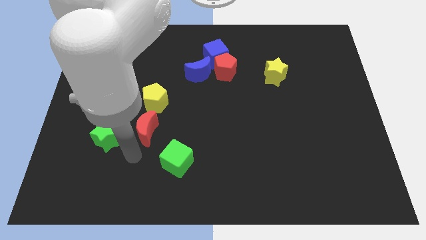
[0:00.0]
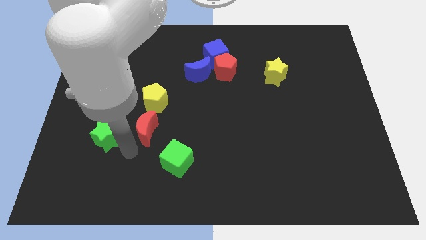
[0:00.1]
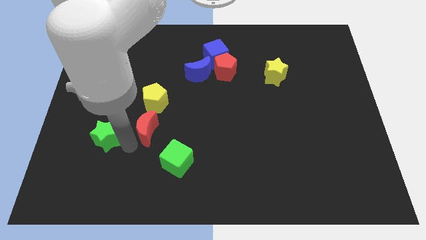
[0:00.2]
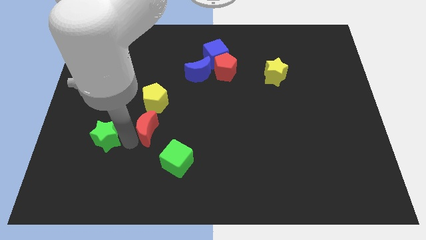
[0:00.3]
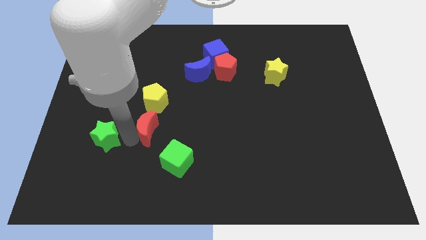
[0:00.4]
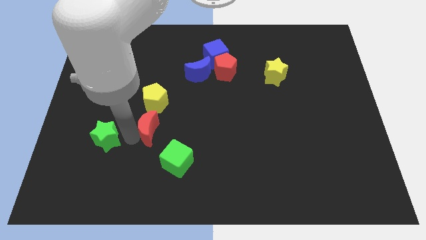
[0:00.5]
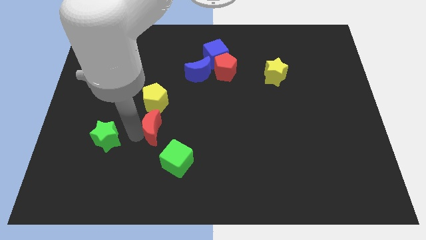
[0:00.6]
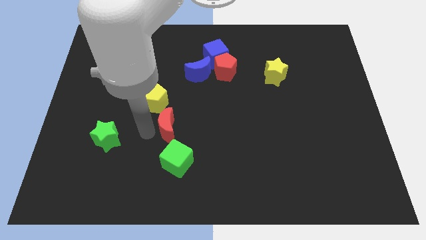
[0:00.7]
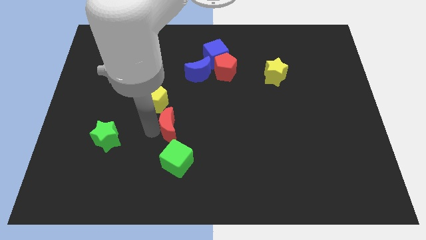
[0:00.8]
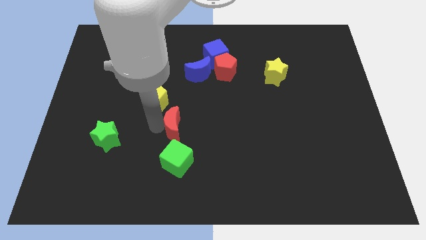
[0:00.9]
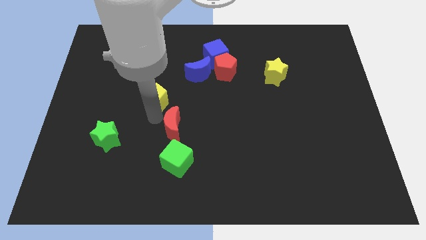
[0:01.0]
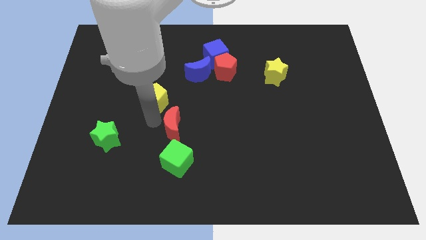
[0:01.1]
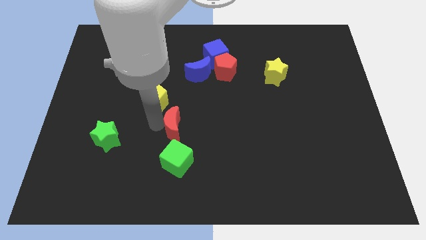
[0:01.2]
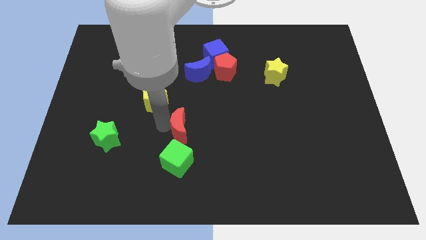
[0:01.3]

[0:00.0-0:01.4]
place the red moon above the green cube

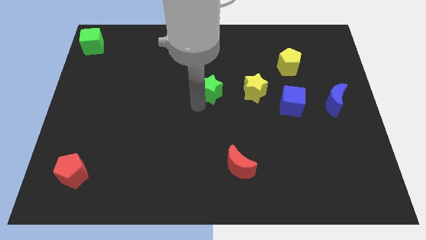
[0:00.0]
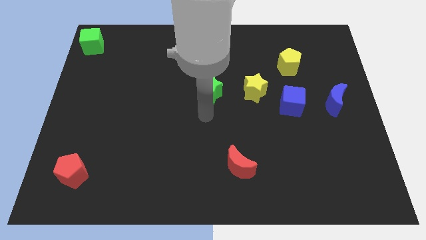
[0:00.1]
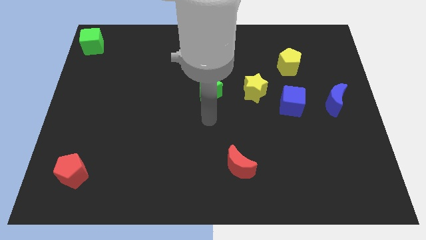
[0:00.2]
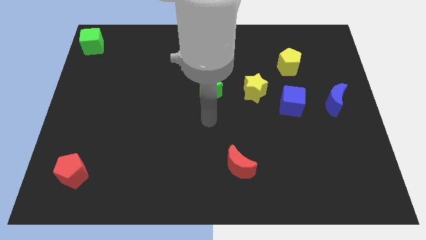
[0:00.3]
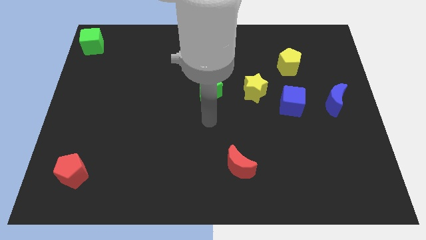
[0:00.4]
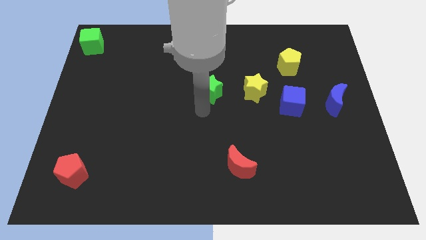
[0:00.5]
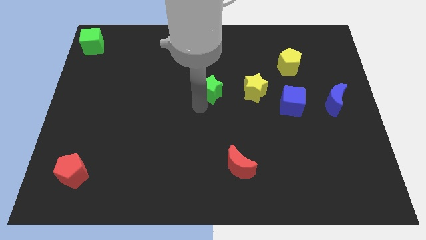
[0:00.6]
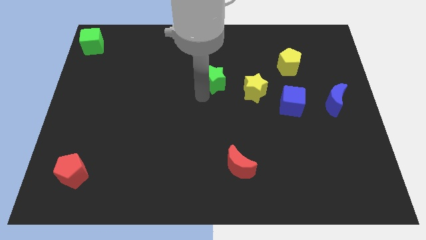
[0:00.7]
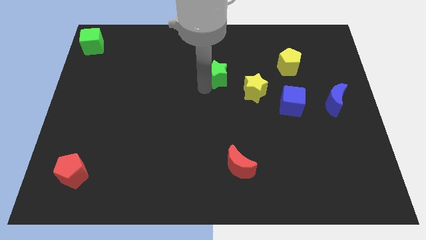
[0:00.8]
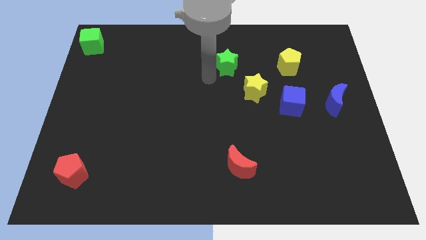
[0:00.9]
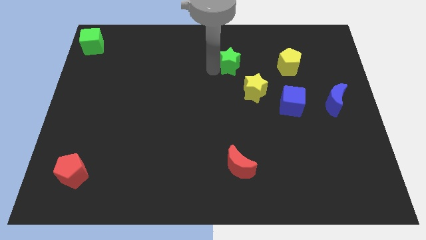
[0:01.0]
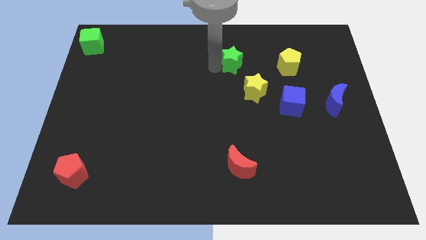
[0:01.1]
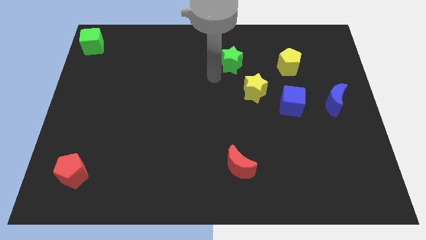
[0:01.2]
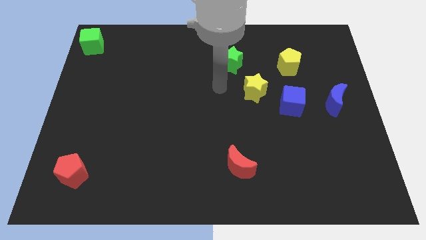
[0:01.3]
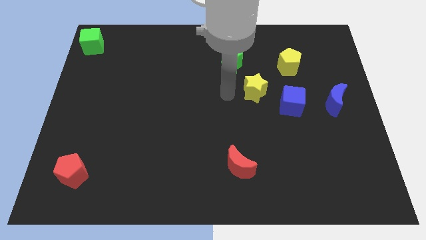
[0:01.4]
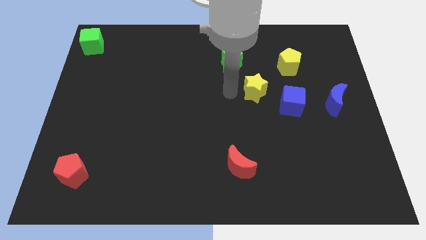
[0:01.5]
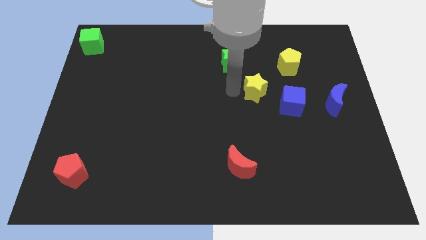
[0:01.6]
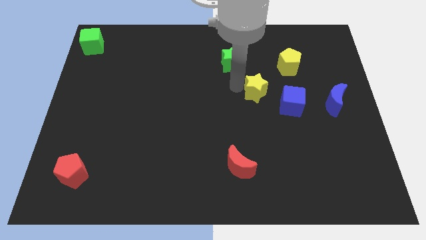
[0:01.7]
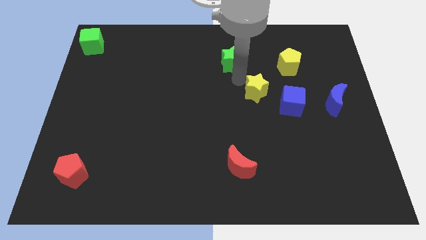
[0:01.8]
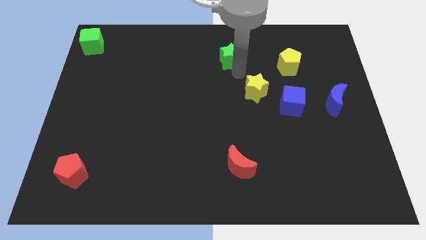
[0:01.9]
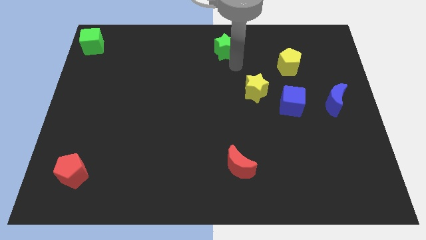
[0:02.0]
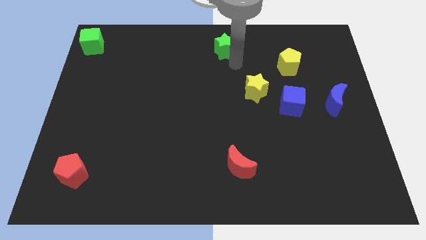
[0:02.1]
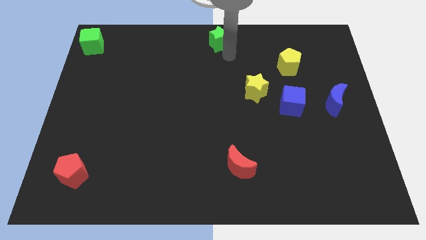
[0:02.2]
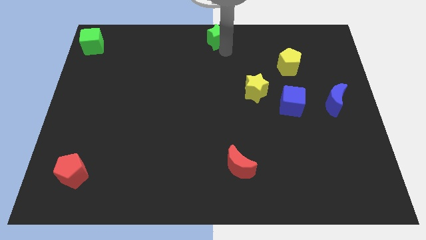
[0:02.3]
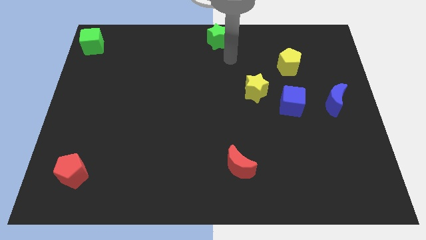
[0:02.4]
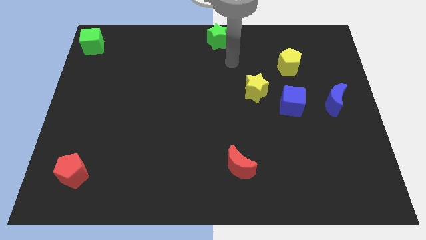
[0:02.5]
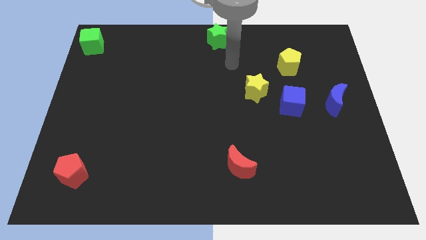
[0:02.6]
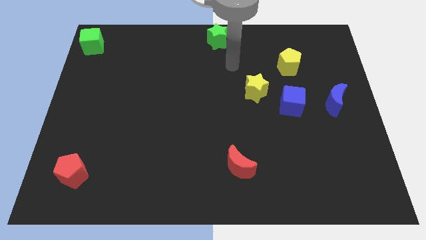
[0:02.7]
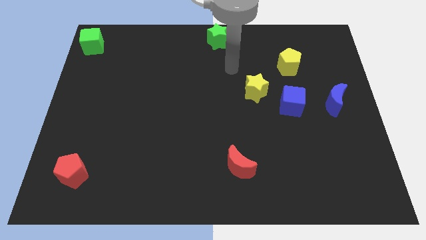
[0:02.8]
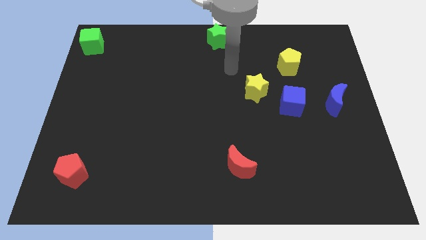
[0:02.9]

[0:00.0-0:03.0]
move the green star to the top center of the board

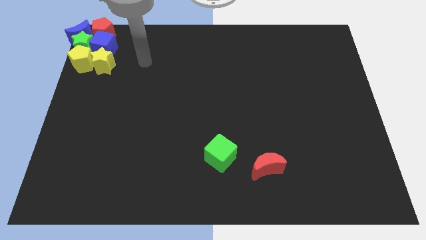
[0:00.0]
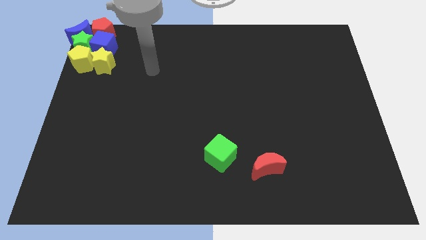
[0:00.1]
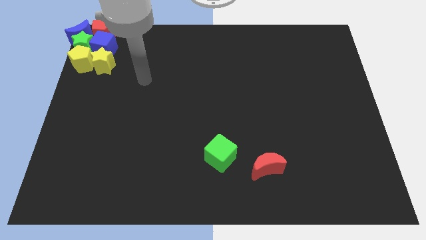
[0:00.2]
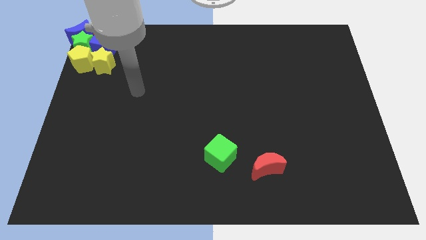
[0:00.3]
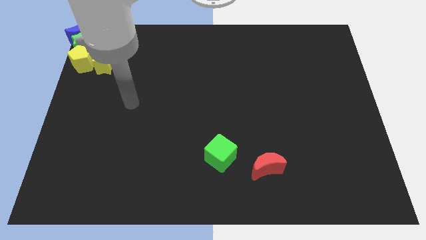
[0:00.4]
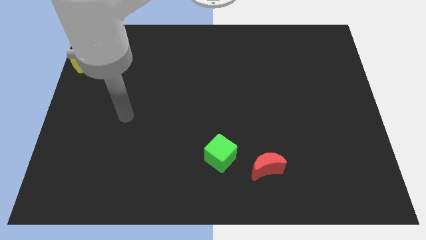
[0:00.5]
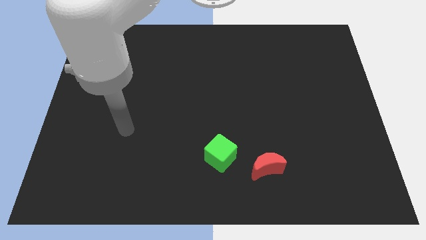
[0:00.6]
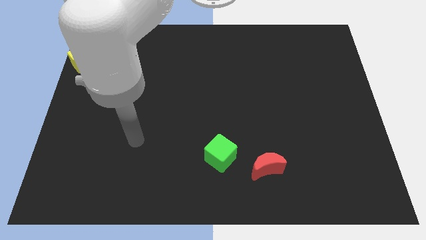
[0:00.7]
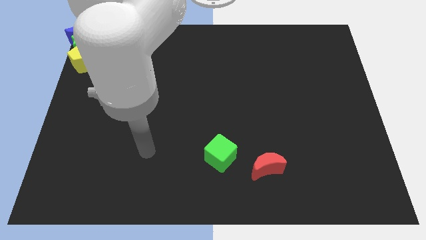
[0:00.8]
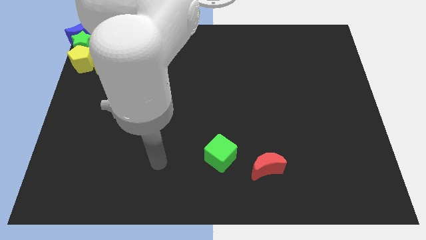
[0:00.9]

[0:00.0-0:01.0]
place your arm to the left side of the green cube

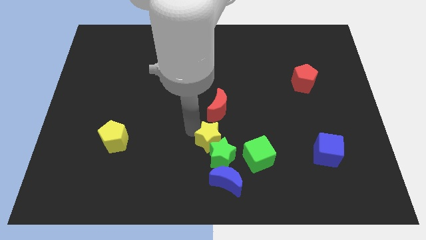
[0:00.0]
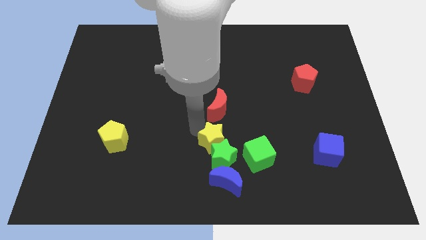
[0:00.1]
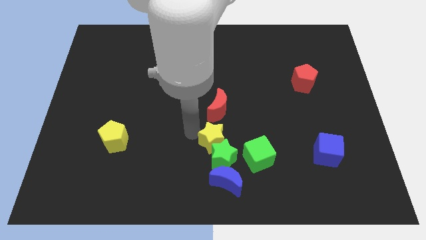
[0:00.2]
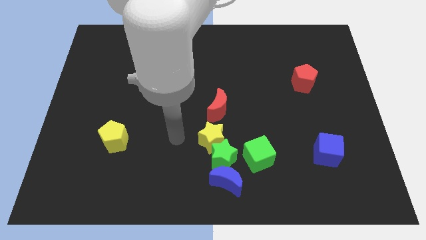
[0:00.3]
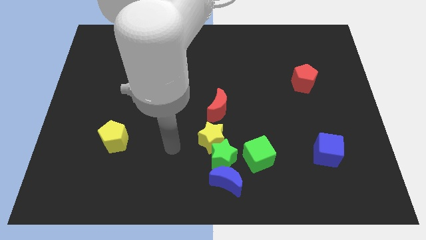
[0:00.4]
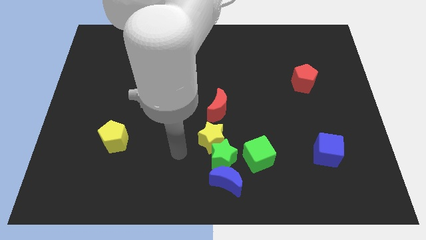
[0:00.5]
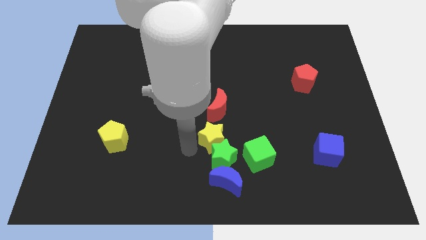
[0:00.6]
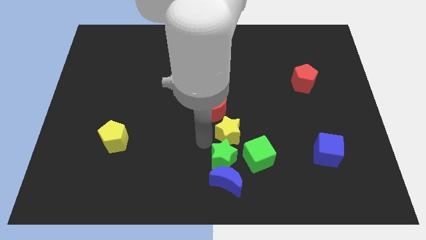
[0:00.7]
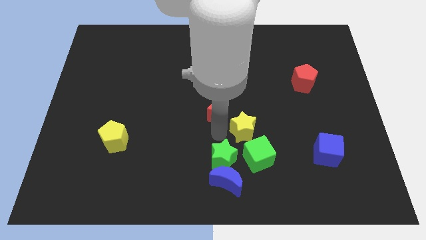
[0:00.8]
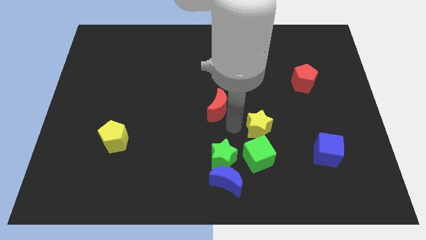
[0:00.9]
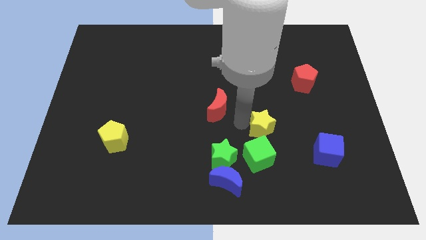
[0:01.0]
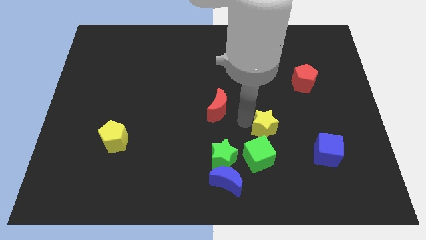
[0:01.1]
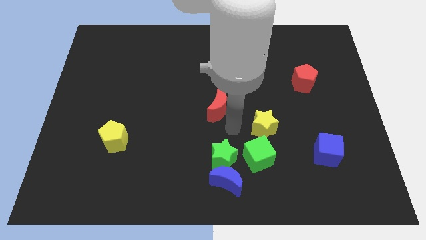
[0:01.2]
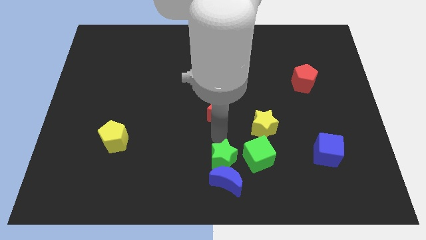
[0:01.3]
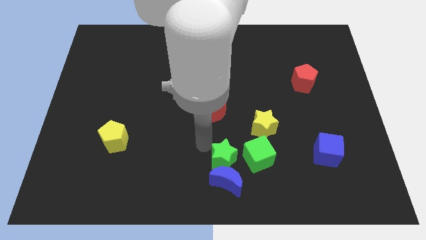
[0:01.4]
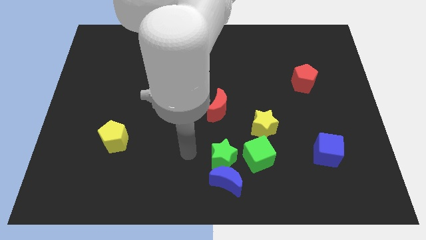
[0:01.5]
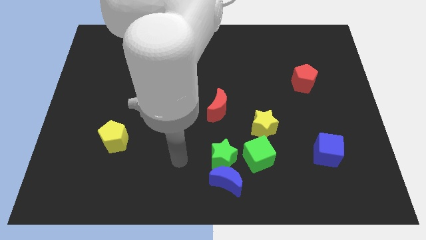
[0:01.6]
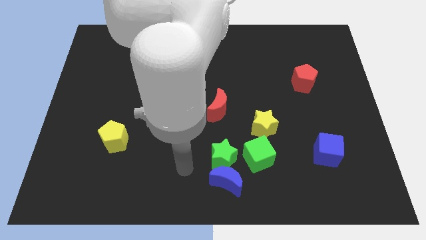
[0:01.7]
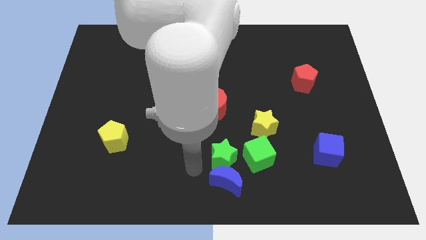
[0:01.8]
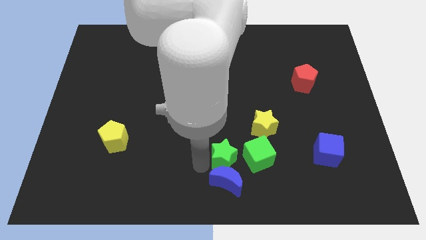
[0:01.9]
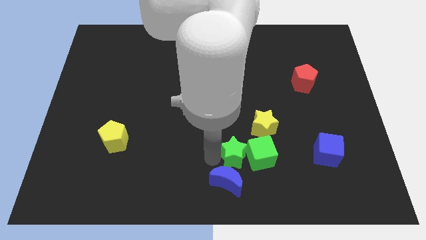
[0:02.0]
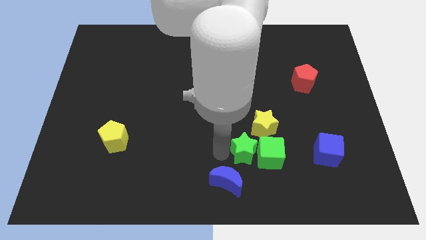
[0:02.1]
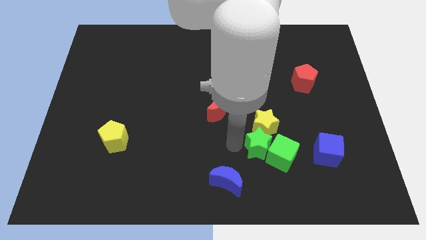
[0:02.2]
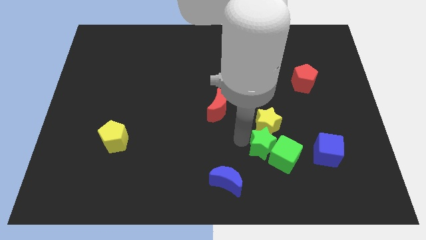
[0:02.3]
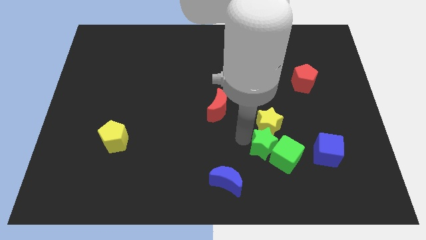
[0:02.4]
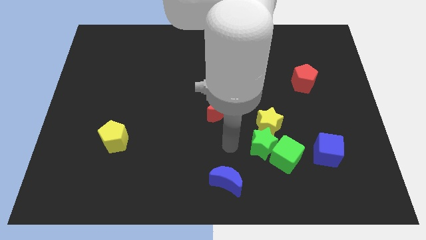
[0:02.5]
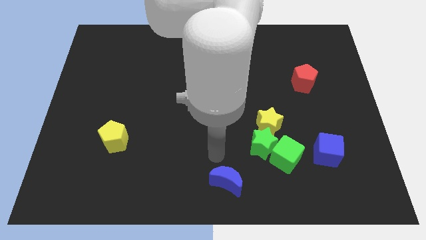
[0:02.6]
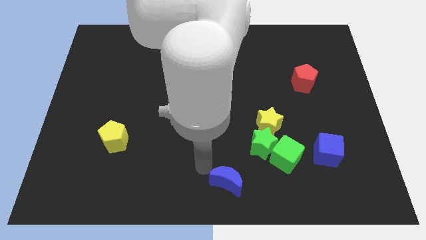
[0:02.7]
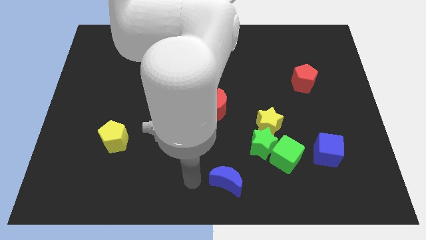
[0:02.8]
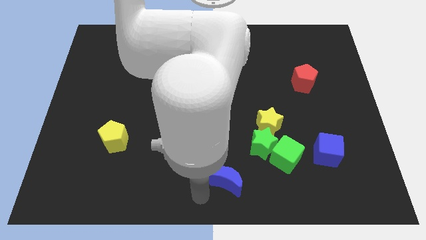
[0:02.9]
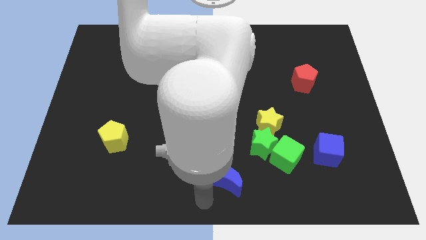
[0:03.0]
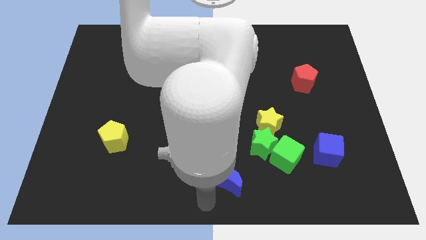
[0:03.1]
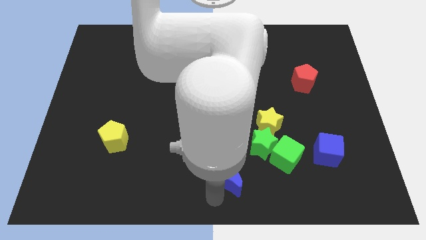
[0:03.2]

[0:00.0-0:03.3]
push yellow star and green star in to green cube

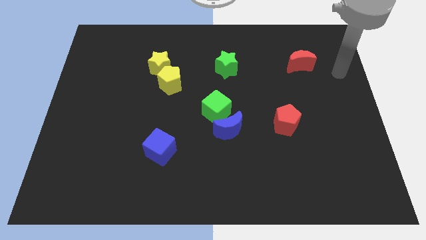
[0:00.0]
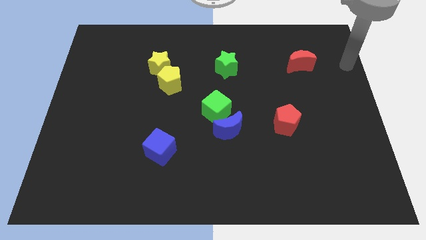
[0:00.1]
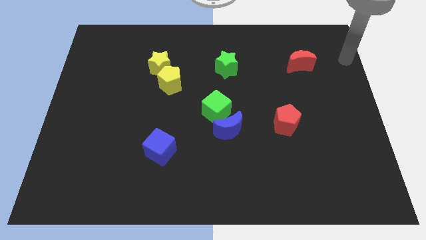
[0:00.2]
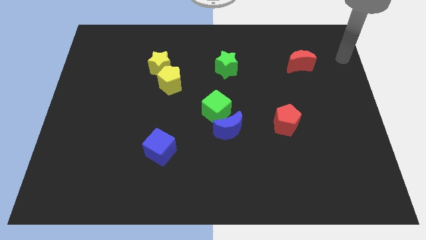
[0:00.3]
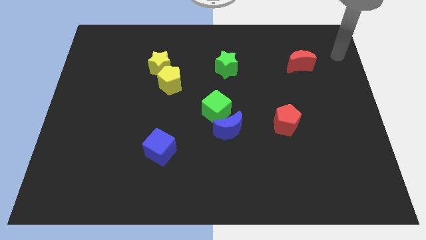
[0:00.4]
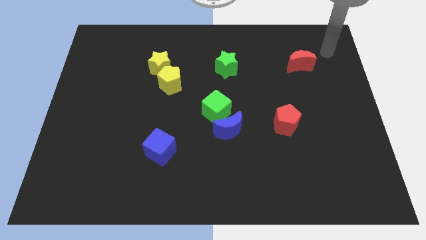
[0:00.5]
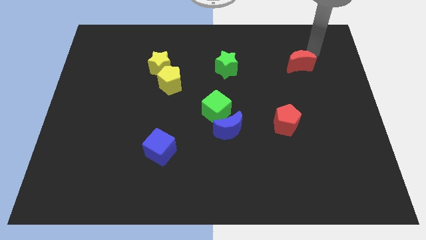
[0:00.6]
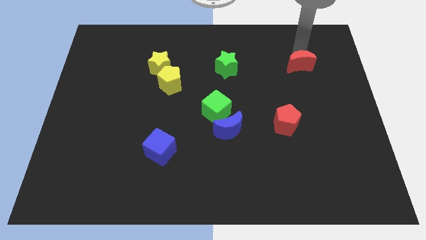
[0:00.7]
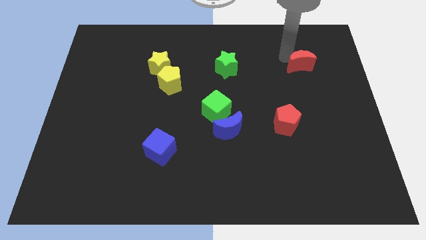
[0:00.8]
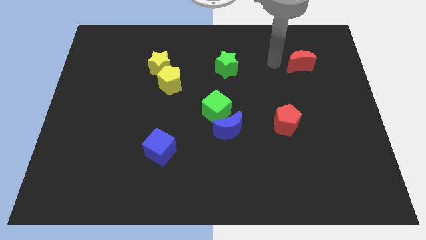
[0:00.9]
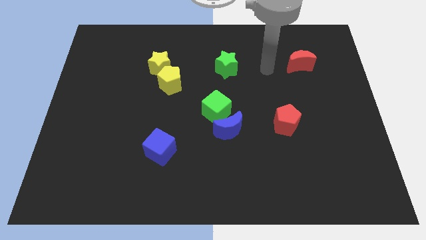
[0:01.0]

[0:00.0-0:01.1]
move arm left beside the red moon
